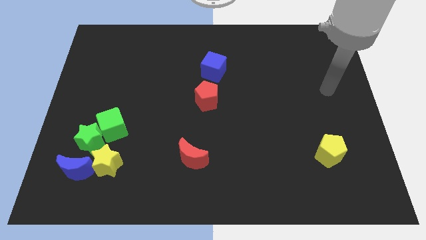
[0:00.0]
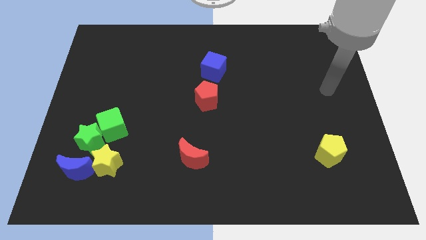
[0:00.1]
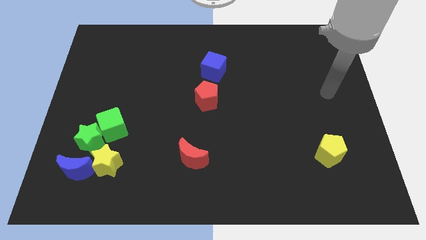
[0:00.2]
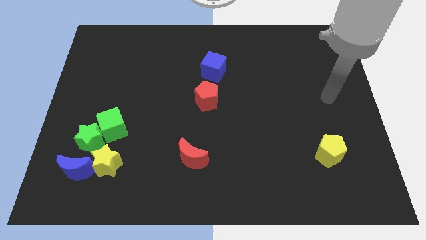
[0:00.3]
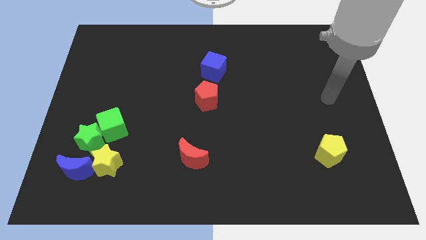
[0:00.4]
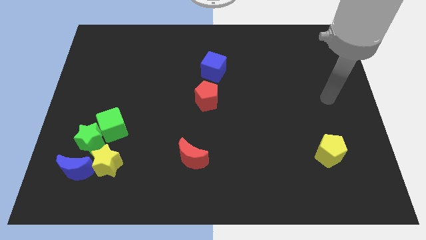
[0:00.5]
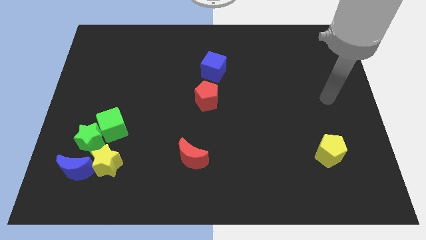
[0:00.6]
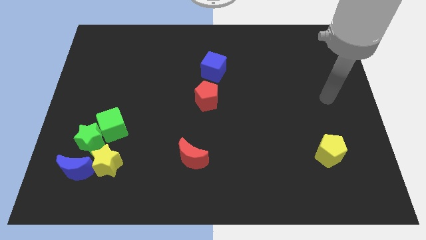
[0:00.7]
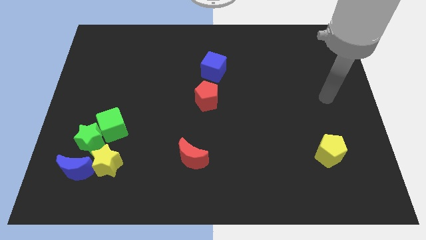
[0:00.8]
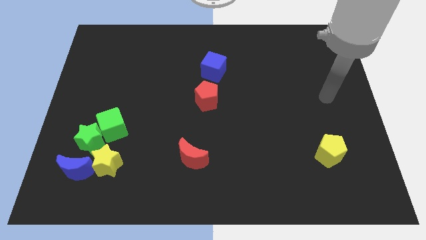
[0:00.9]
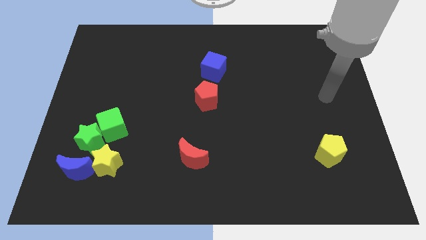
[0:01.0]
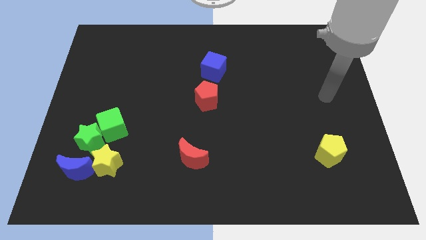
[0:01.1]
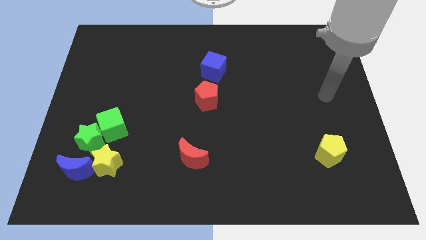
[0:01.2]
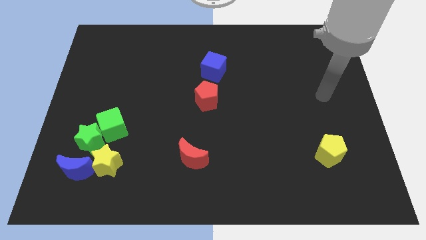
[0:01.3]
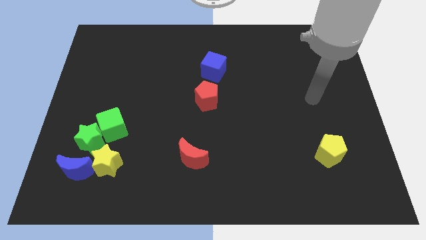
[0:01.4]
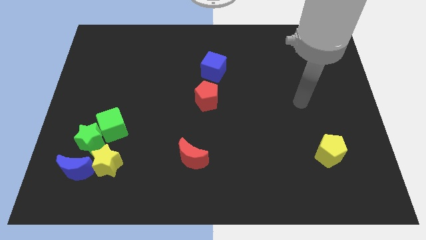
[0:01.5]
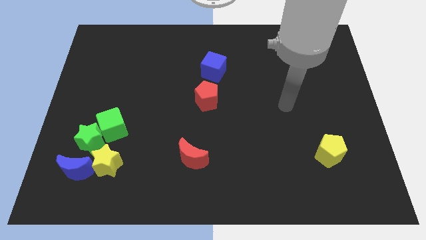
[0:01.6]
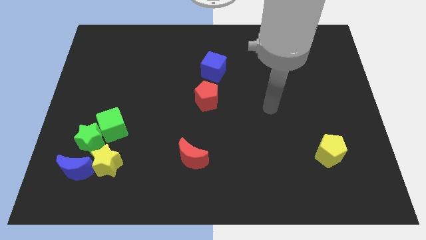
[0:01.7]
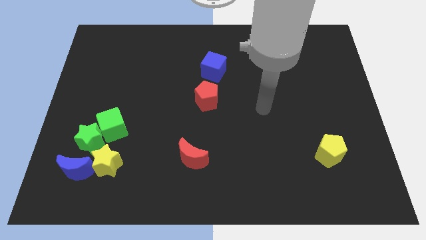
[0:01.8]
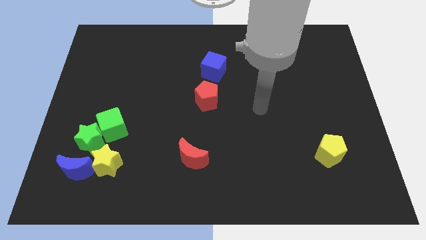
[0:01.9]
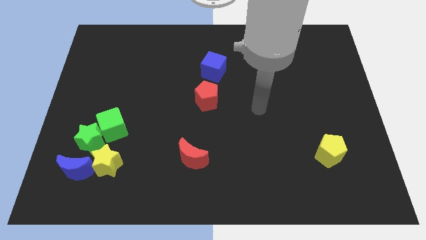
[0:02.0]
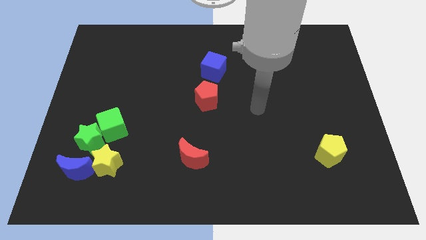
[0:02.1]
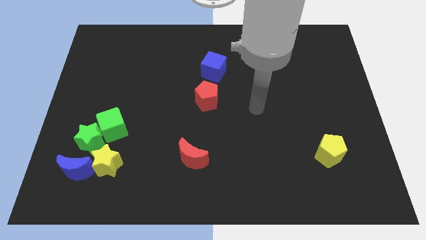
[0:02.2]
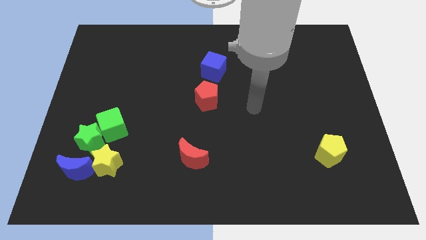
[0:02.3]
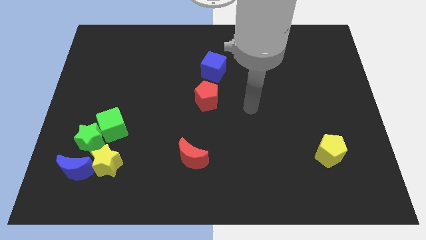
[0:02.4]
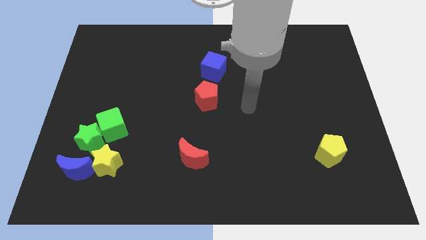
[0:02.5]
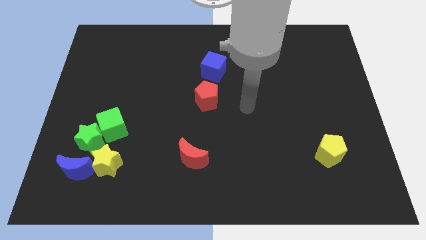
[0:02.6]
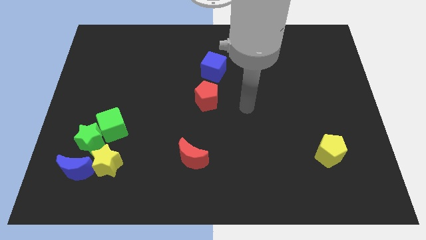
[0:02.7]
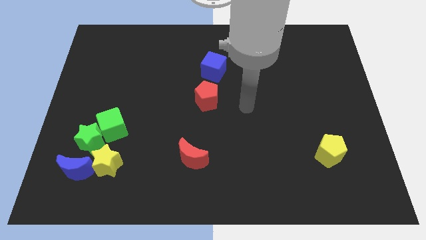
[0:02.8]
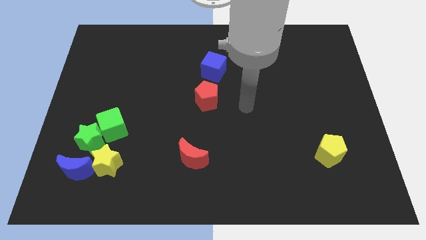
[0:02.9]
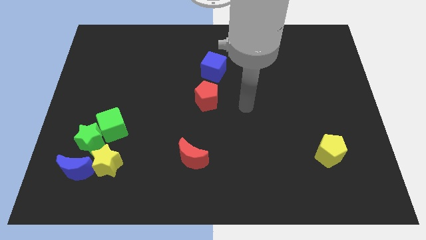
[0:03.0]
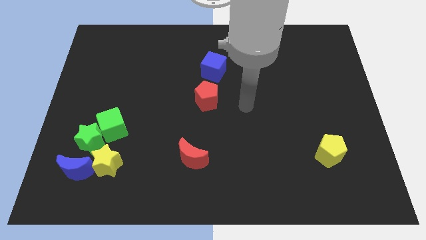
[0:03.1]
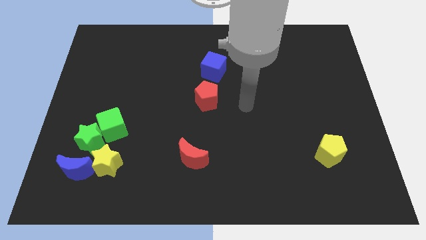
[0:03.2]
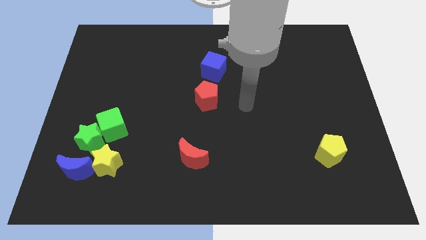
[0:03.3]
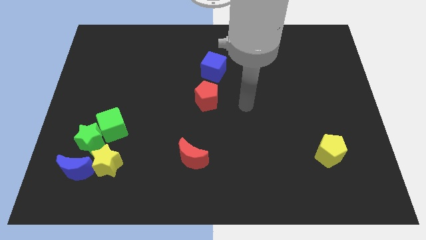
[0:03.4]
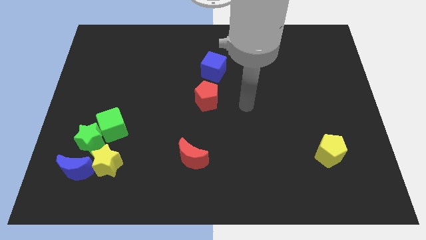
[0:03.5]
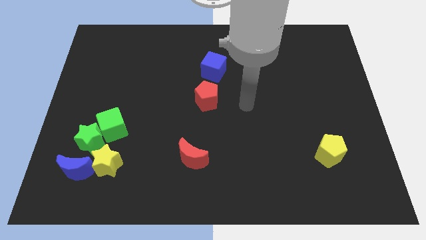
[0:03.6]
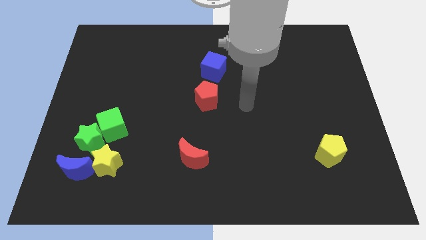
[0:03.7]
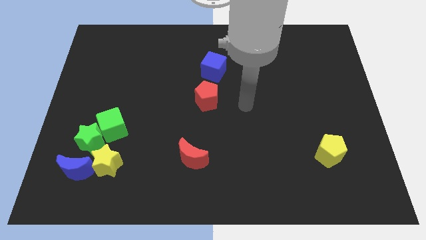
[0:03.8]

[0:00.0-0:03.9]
move the arm to the center of the board

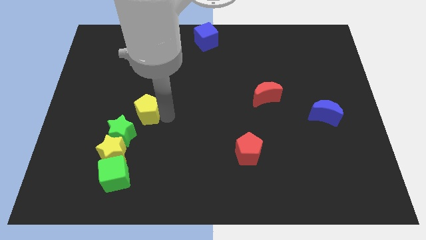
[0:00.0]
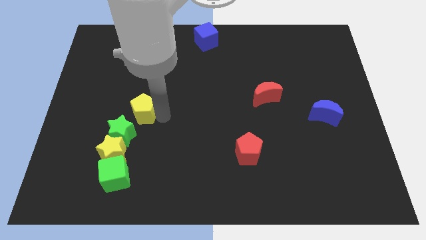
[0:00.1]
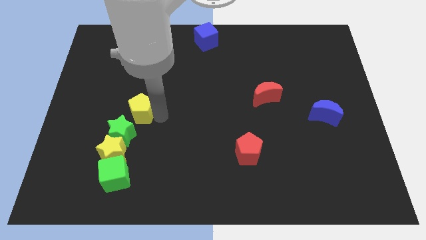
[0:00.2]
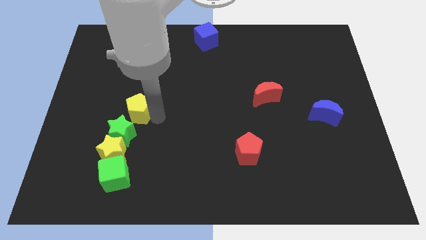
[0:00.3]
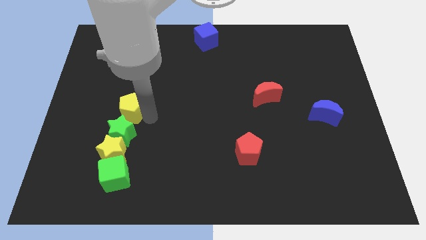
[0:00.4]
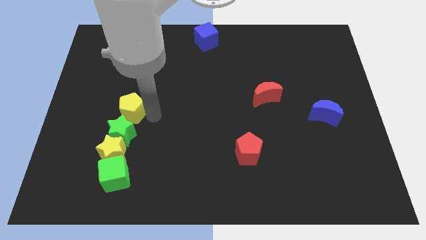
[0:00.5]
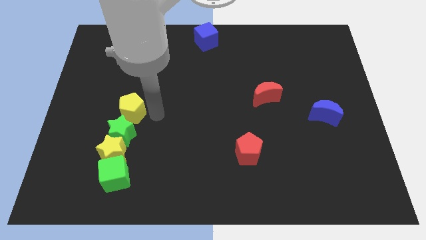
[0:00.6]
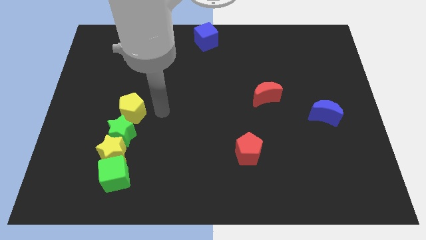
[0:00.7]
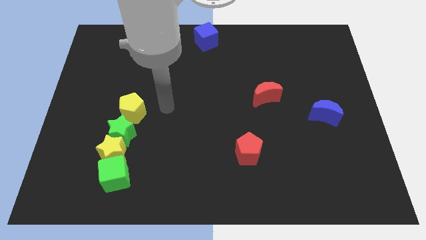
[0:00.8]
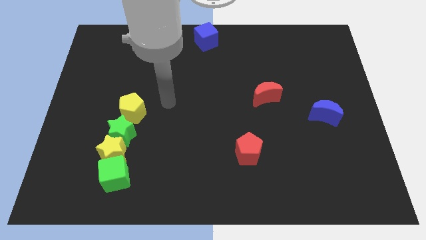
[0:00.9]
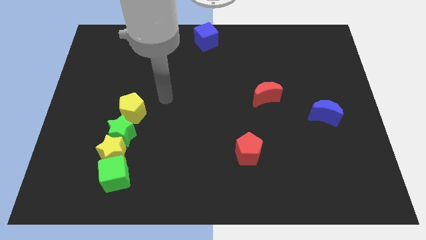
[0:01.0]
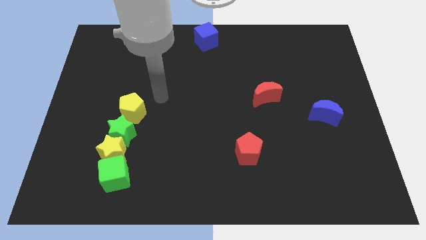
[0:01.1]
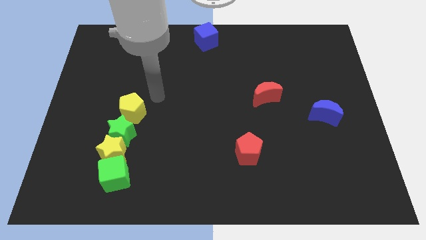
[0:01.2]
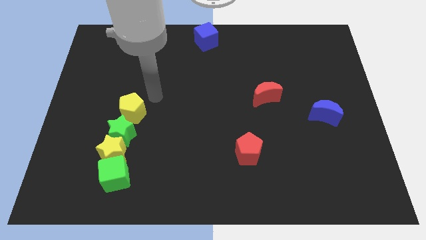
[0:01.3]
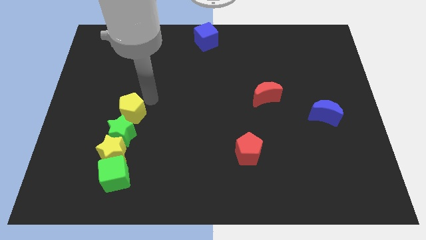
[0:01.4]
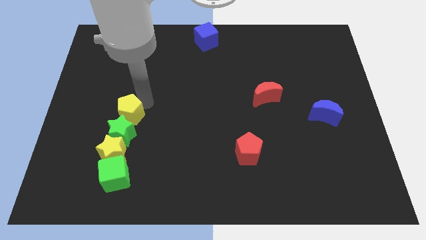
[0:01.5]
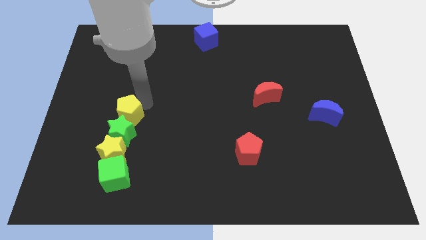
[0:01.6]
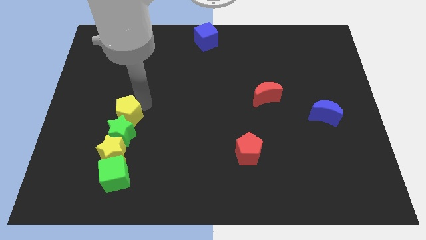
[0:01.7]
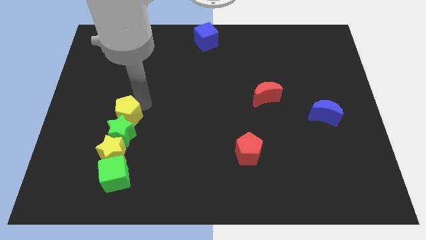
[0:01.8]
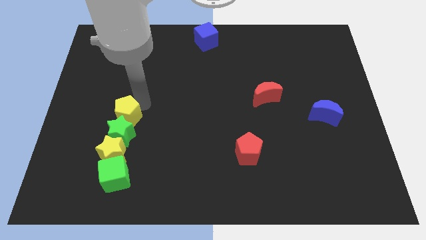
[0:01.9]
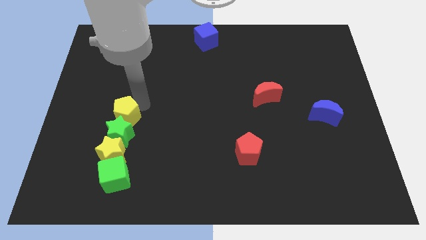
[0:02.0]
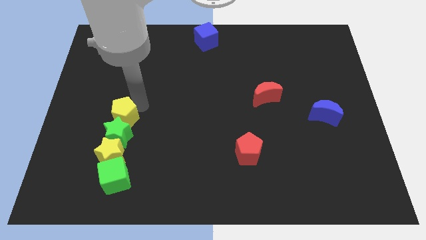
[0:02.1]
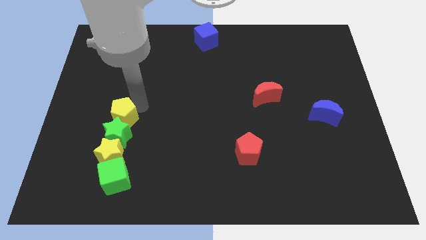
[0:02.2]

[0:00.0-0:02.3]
push the yellow pentagon into the green star

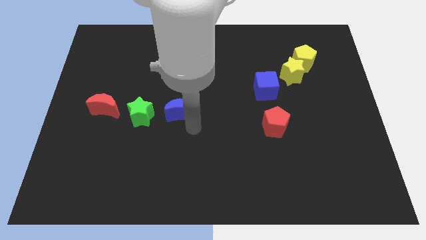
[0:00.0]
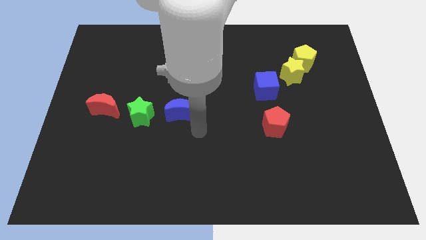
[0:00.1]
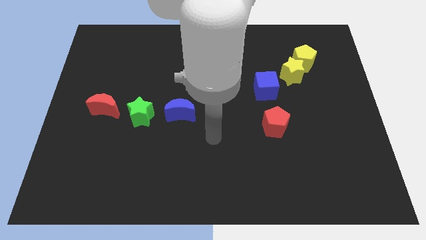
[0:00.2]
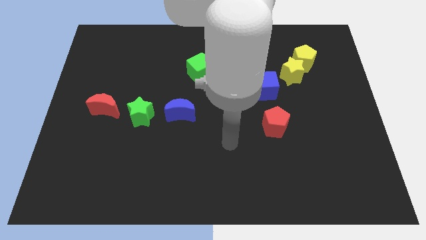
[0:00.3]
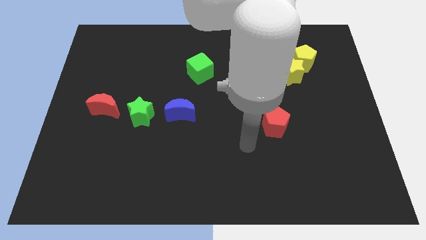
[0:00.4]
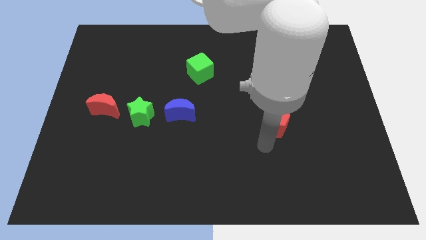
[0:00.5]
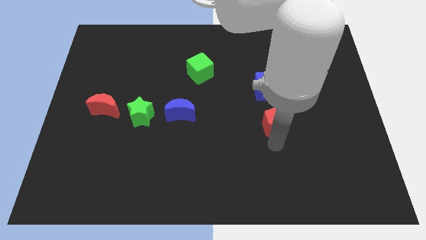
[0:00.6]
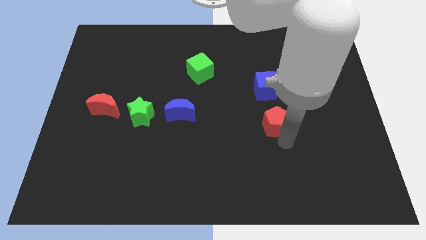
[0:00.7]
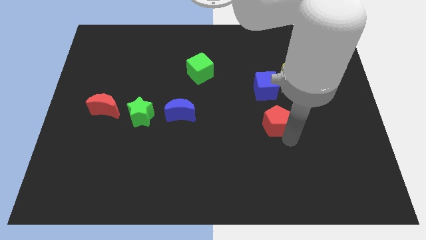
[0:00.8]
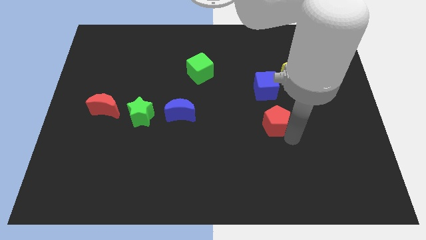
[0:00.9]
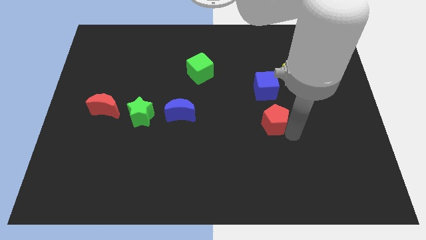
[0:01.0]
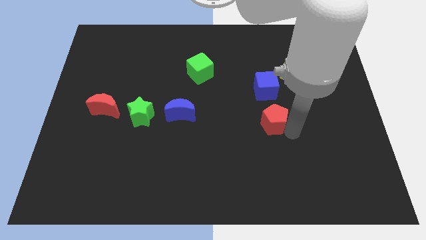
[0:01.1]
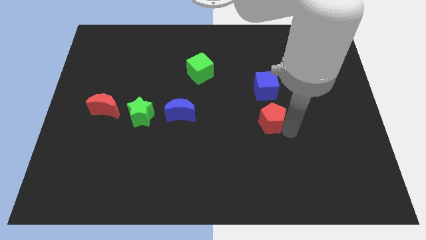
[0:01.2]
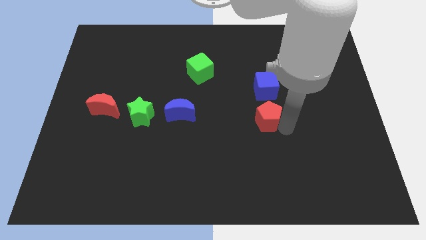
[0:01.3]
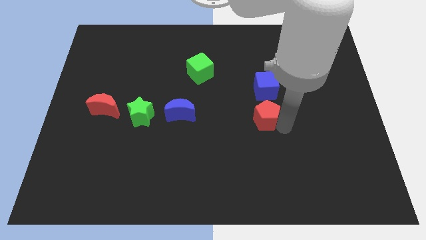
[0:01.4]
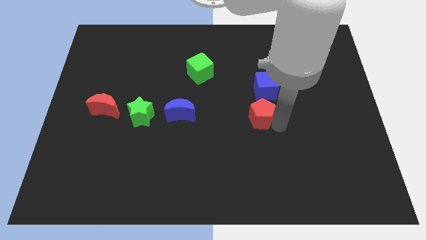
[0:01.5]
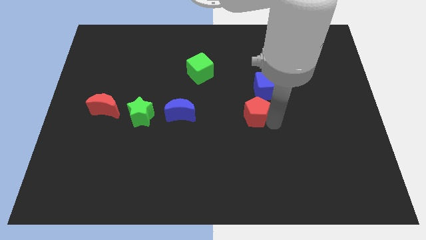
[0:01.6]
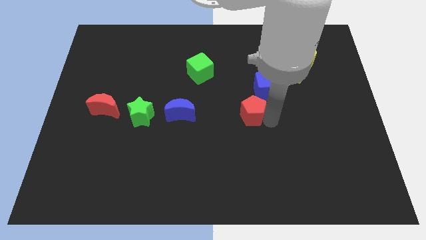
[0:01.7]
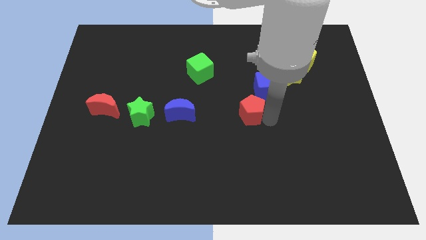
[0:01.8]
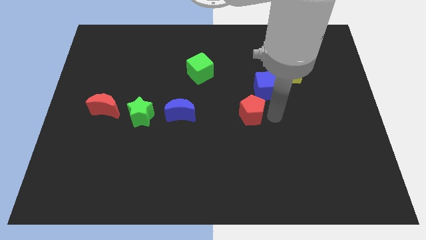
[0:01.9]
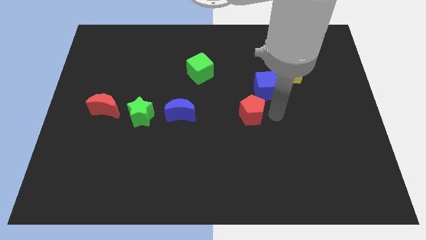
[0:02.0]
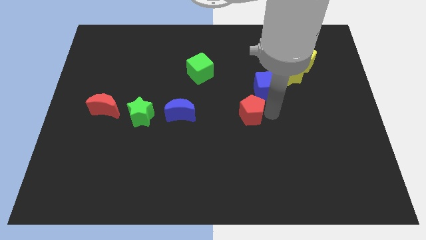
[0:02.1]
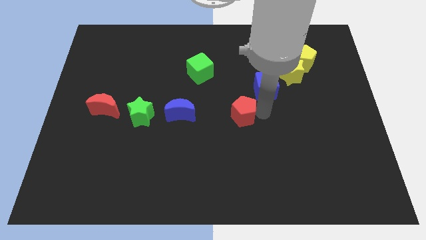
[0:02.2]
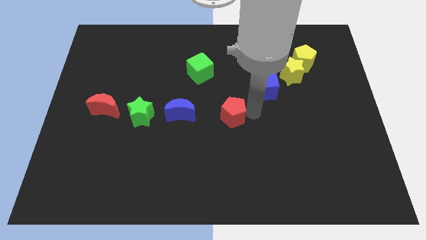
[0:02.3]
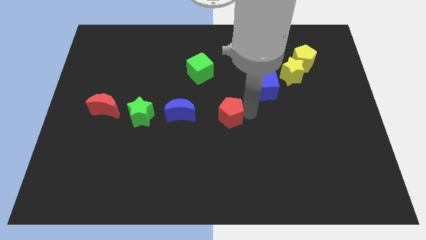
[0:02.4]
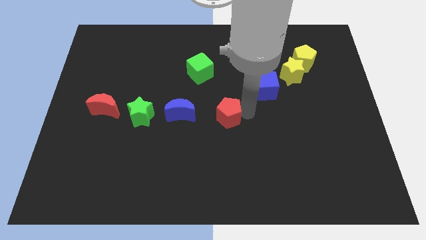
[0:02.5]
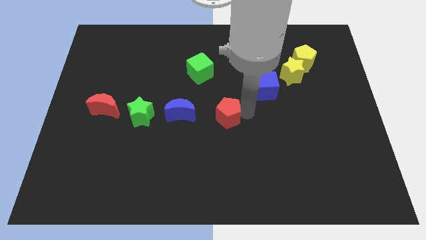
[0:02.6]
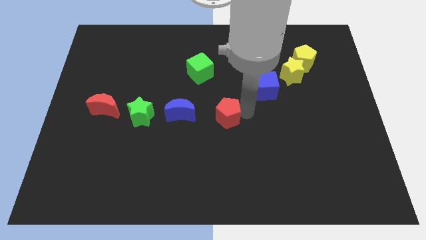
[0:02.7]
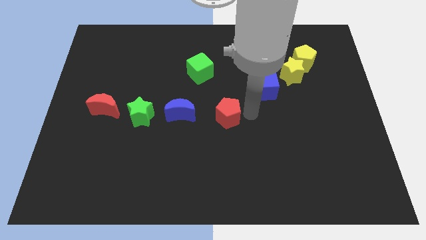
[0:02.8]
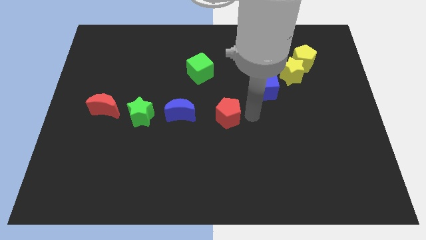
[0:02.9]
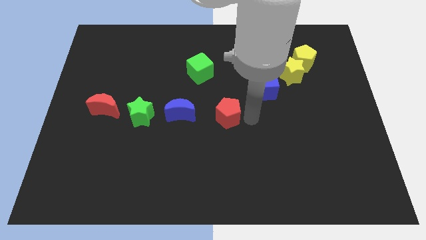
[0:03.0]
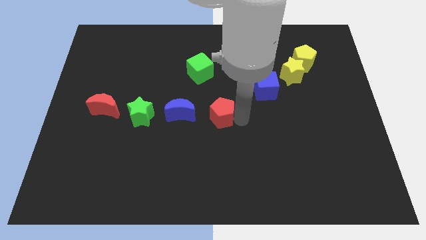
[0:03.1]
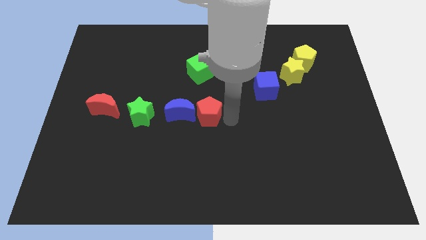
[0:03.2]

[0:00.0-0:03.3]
drag the red pentagon diagonally on the bottom left side of the blue cube
